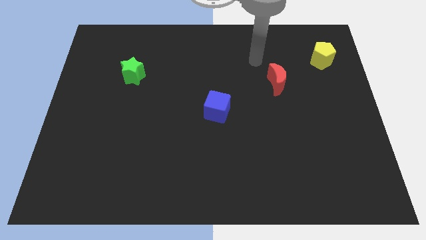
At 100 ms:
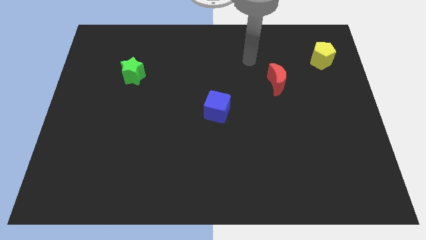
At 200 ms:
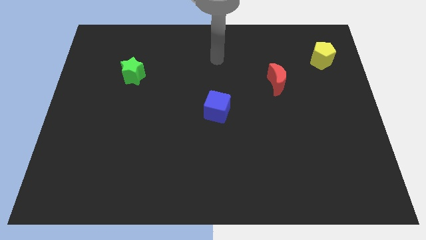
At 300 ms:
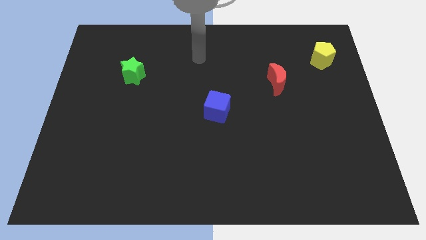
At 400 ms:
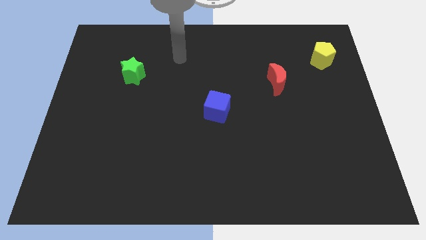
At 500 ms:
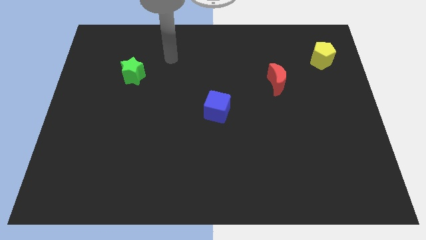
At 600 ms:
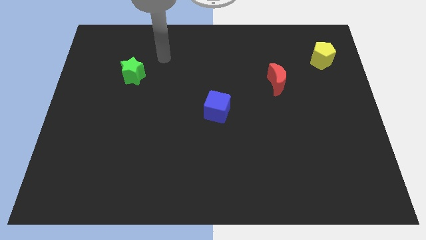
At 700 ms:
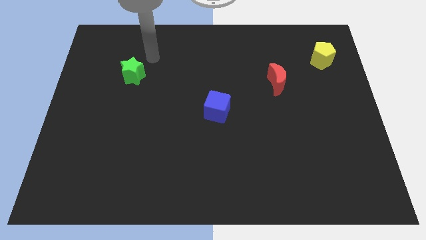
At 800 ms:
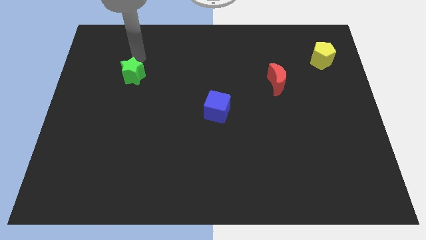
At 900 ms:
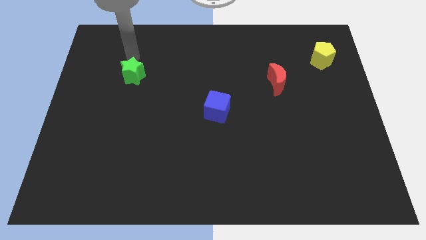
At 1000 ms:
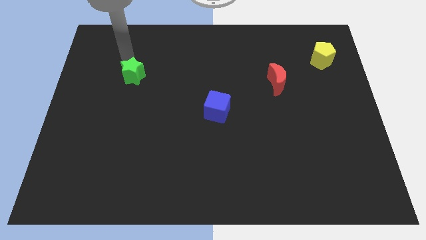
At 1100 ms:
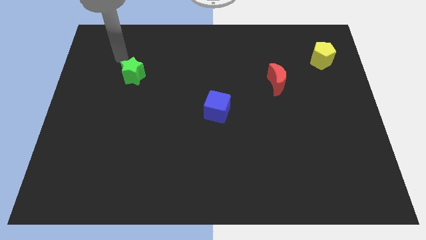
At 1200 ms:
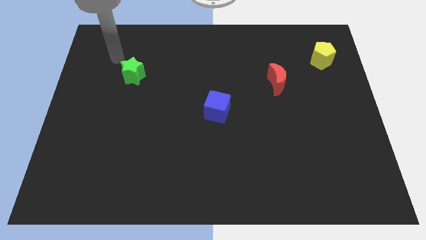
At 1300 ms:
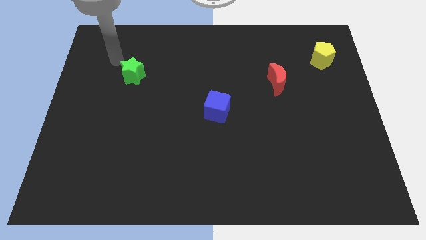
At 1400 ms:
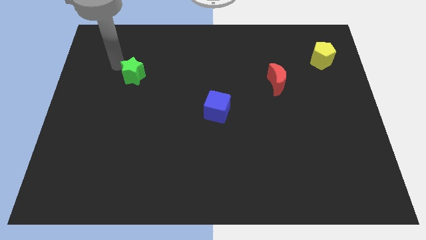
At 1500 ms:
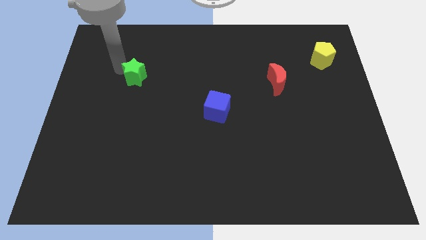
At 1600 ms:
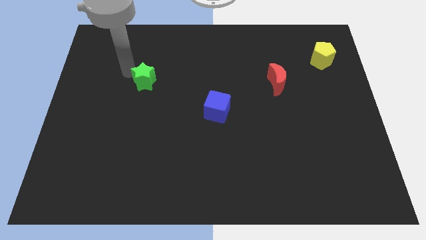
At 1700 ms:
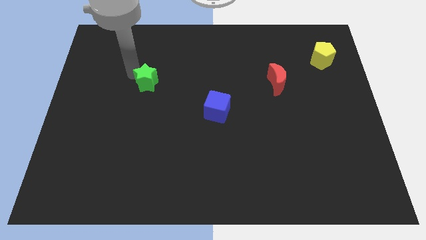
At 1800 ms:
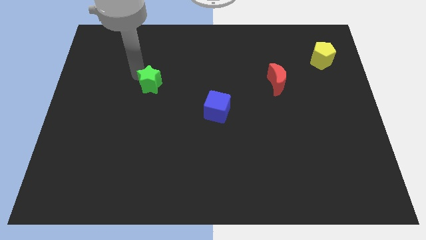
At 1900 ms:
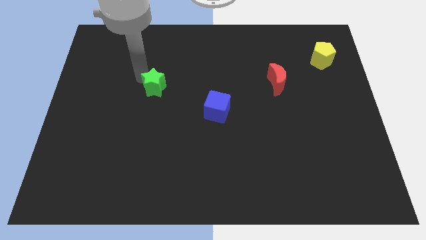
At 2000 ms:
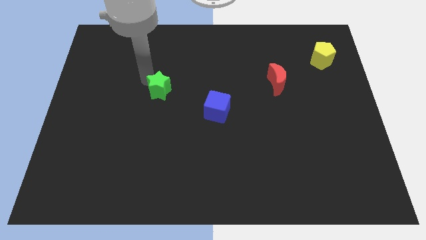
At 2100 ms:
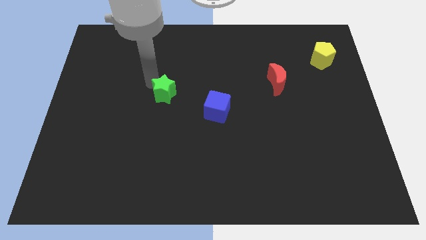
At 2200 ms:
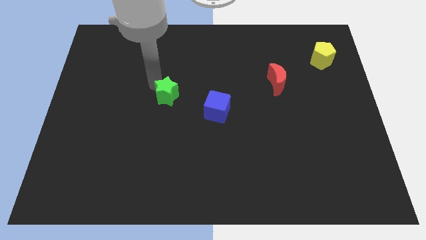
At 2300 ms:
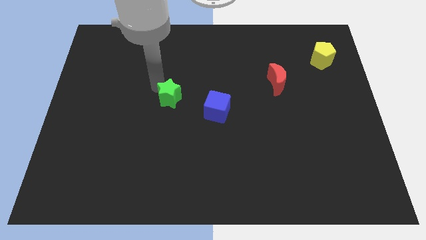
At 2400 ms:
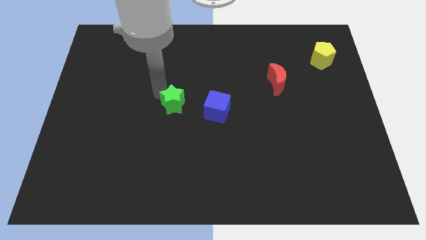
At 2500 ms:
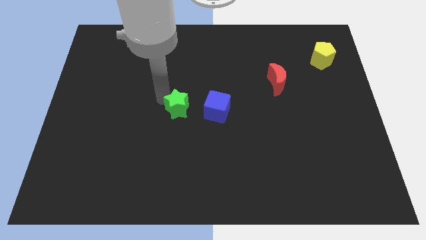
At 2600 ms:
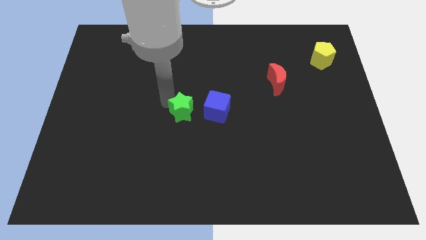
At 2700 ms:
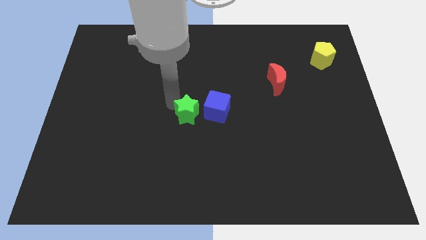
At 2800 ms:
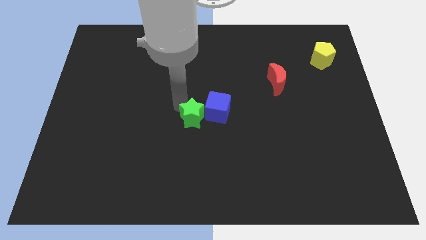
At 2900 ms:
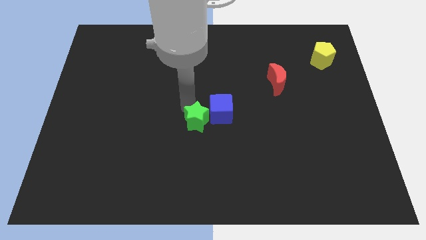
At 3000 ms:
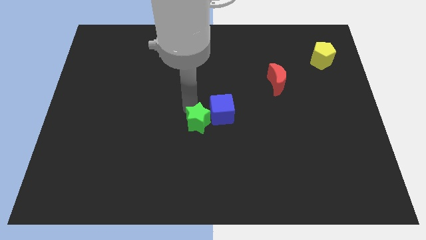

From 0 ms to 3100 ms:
move the green star to the blue cube

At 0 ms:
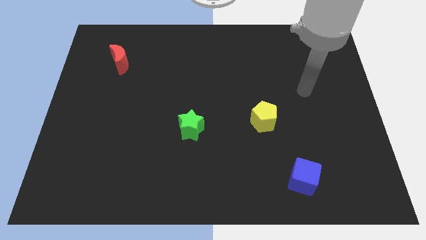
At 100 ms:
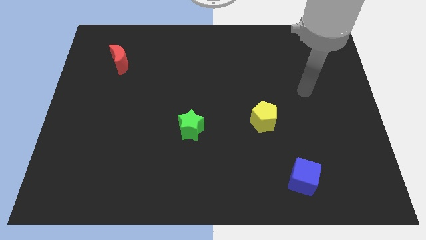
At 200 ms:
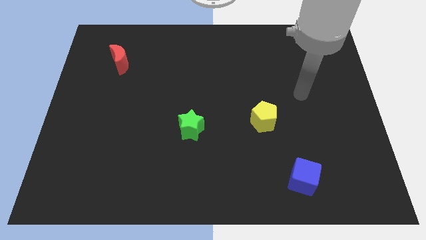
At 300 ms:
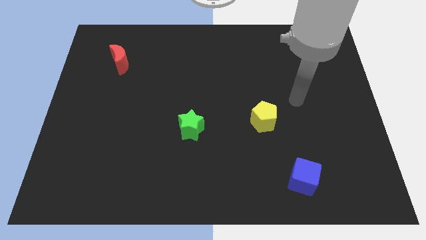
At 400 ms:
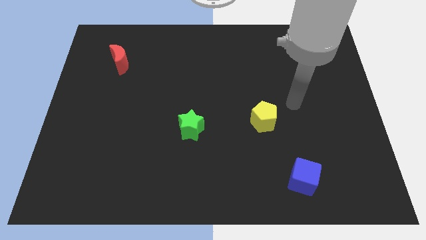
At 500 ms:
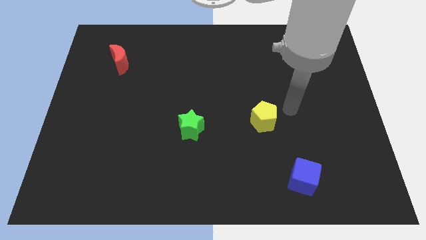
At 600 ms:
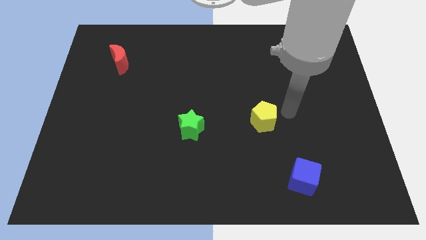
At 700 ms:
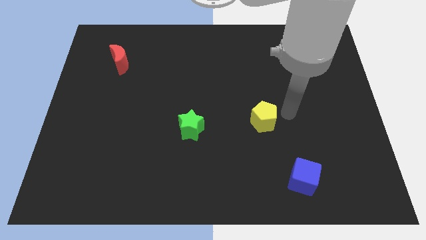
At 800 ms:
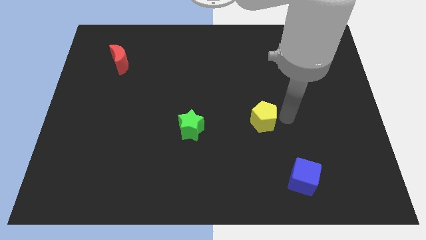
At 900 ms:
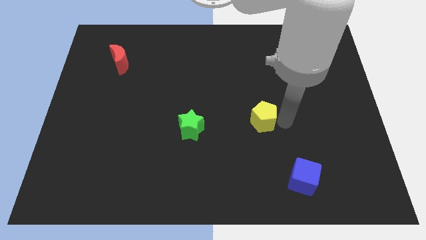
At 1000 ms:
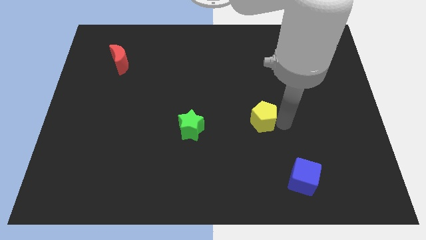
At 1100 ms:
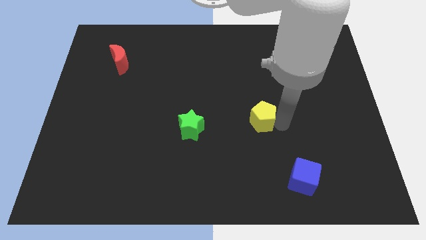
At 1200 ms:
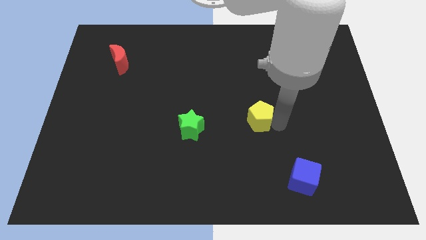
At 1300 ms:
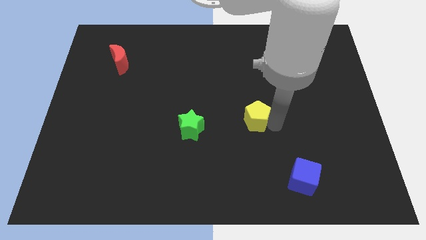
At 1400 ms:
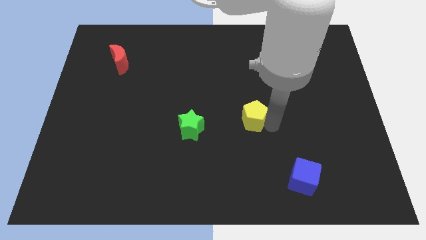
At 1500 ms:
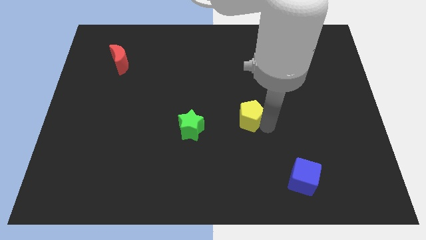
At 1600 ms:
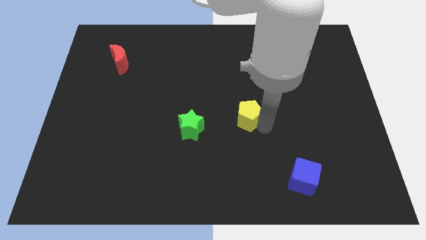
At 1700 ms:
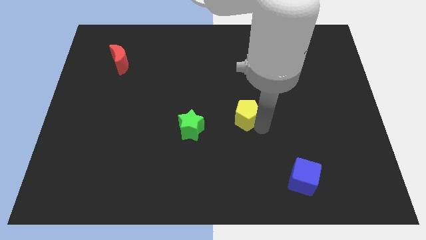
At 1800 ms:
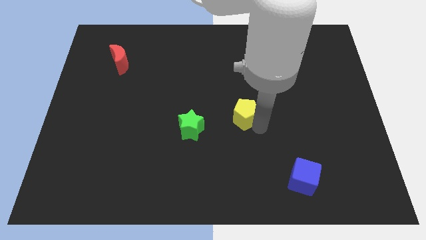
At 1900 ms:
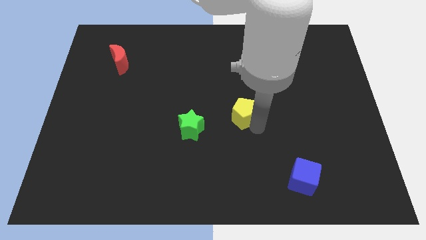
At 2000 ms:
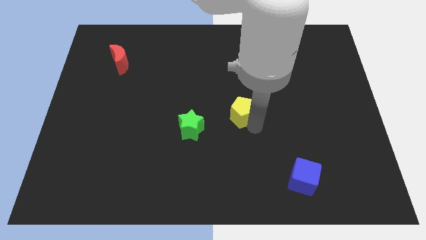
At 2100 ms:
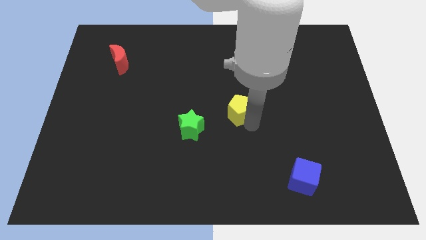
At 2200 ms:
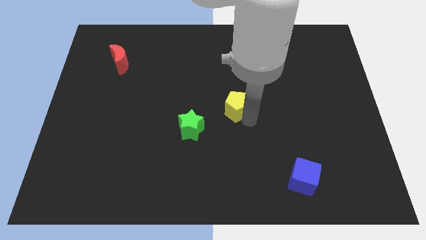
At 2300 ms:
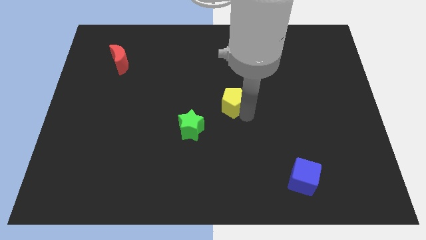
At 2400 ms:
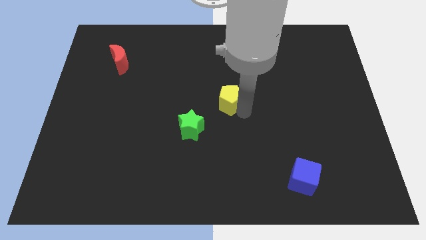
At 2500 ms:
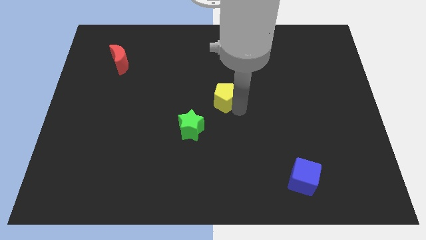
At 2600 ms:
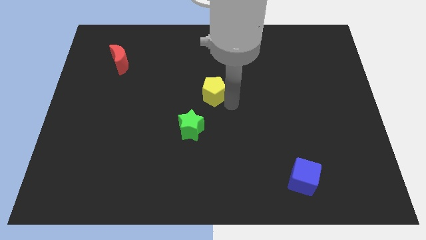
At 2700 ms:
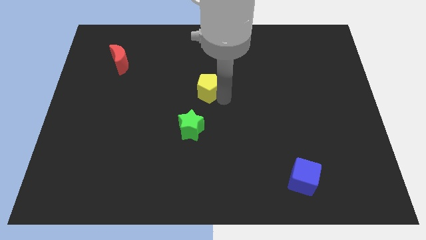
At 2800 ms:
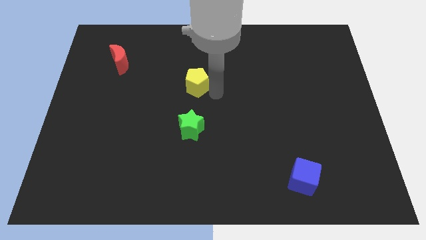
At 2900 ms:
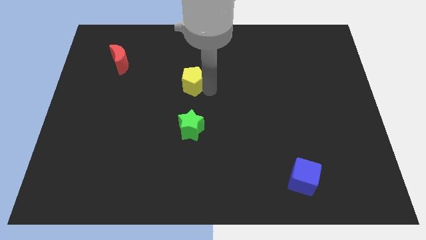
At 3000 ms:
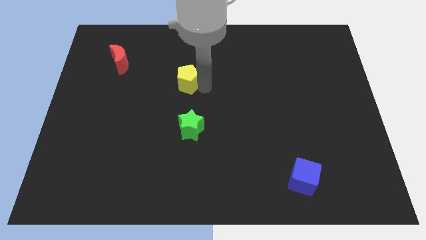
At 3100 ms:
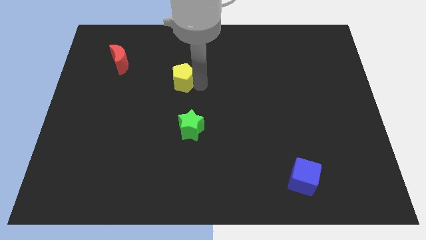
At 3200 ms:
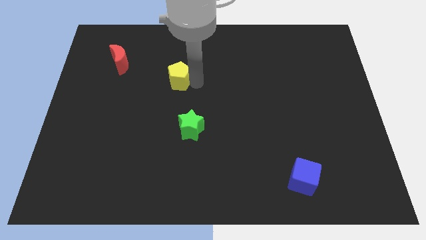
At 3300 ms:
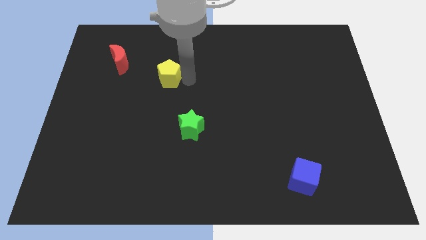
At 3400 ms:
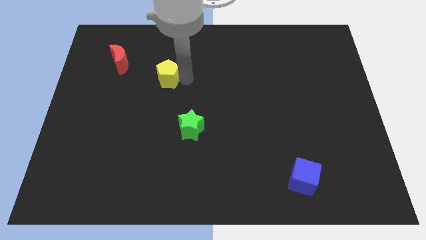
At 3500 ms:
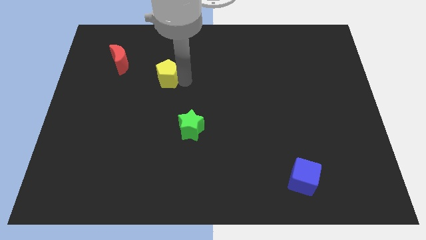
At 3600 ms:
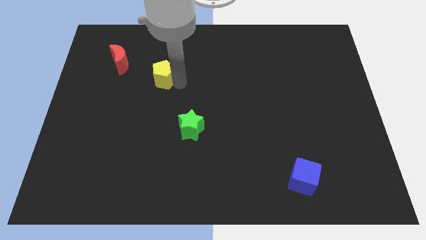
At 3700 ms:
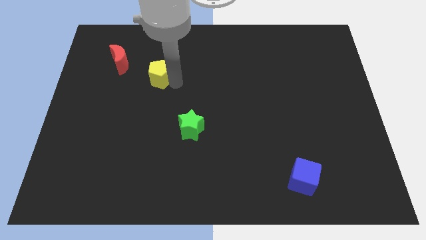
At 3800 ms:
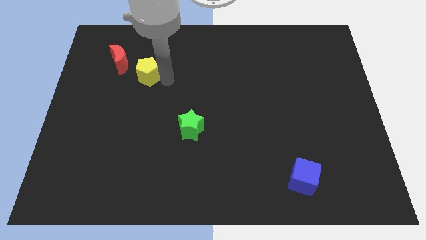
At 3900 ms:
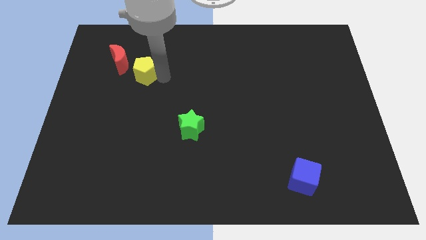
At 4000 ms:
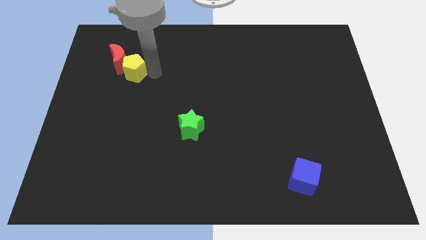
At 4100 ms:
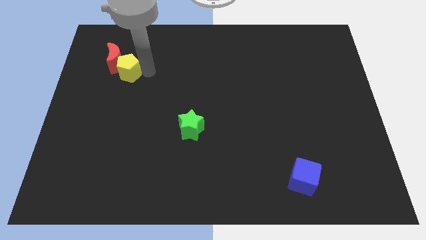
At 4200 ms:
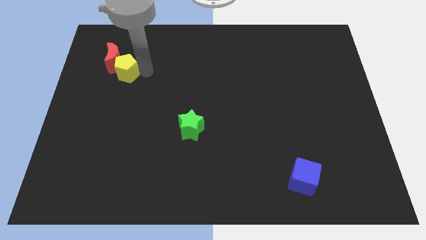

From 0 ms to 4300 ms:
put the pentagon close to the moon
